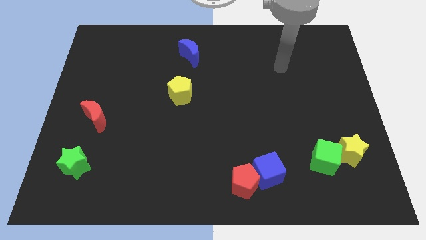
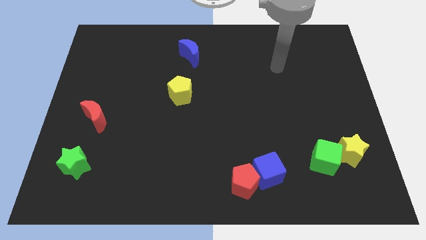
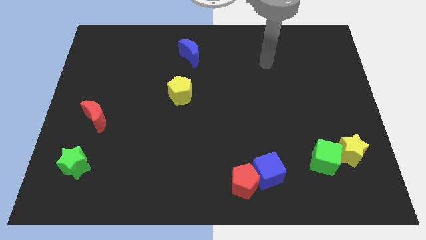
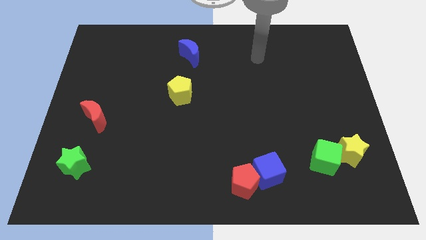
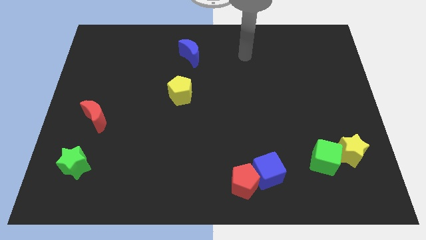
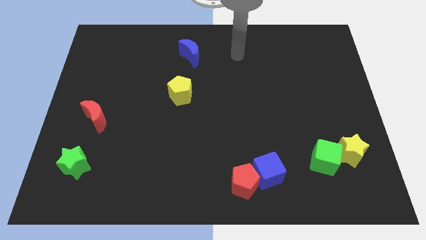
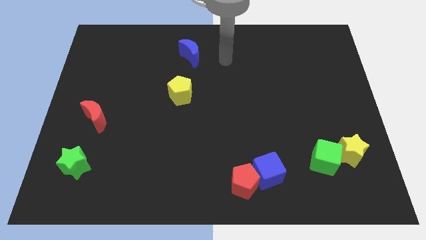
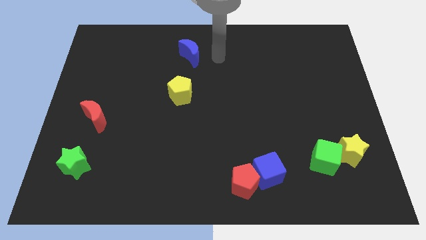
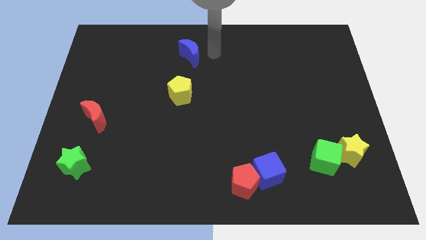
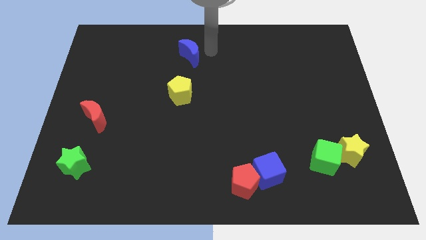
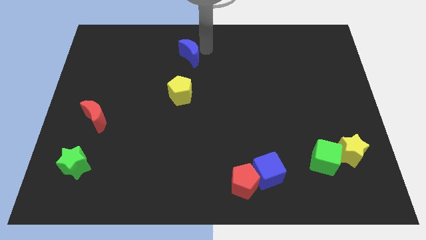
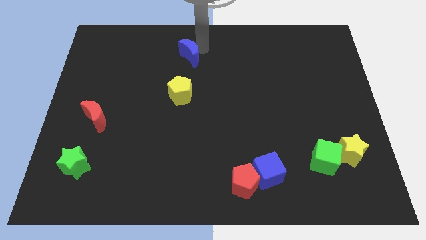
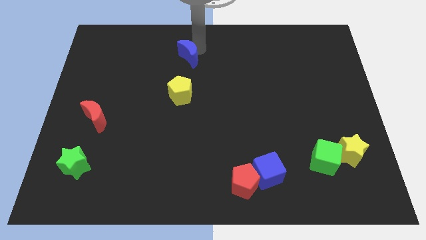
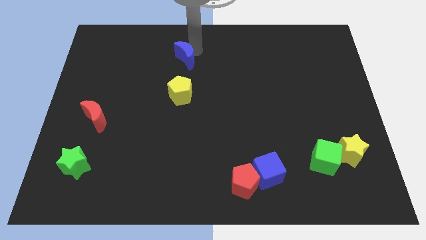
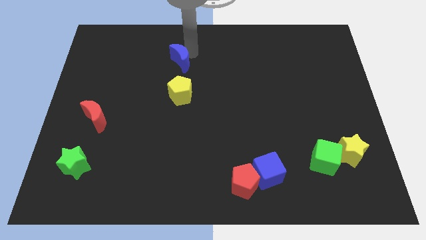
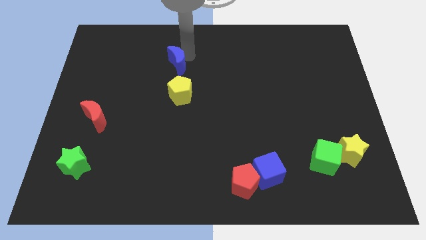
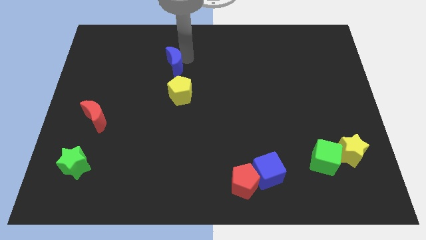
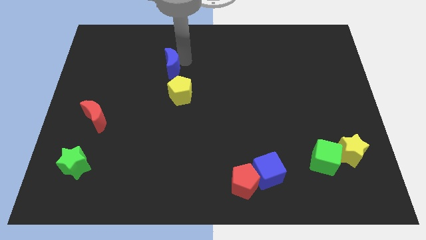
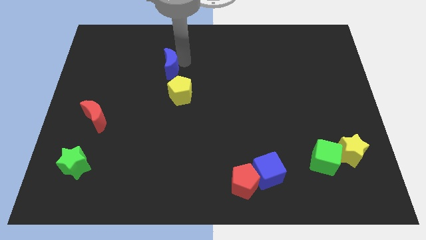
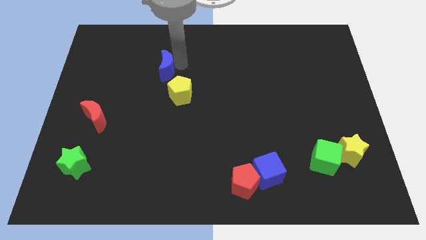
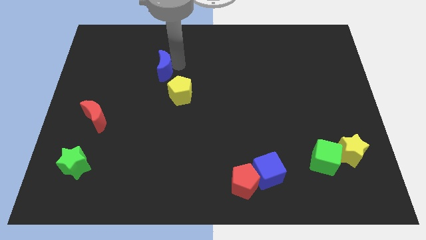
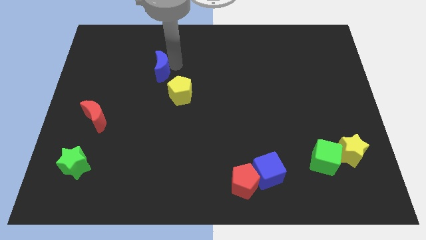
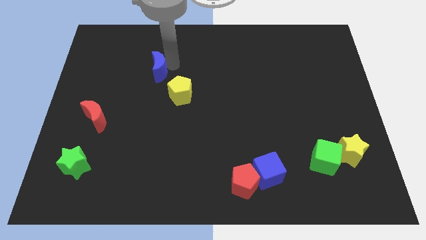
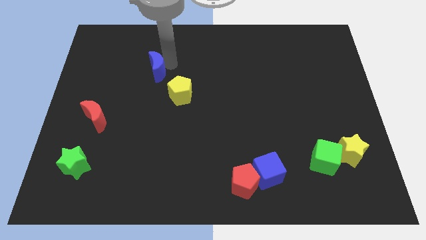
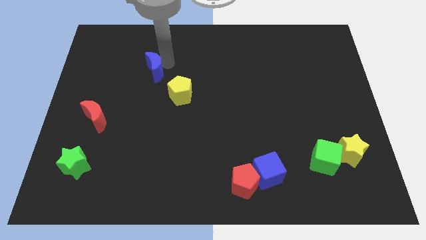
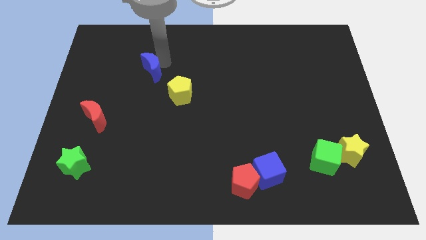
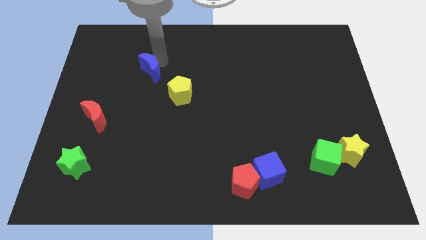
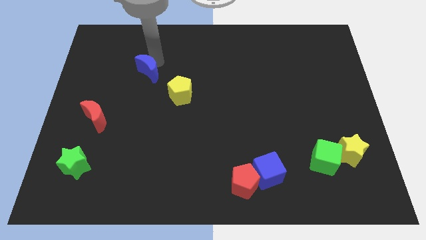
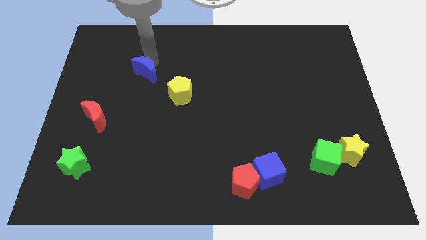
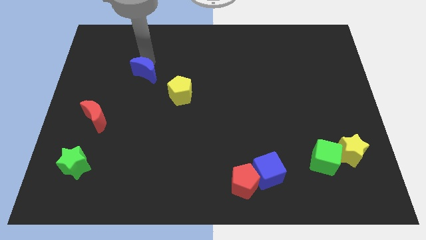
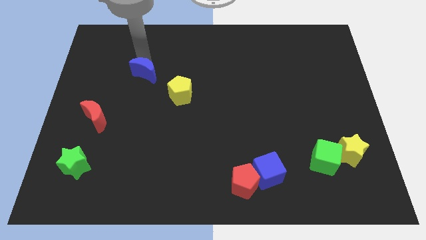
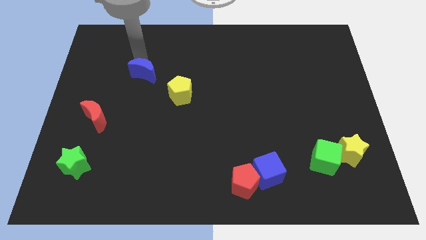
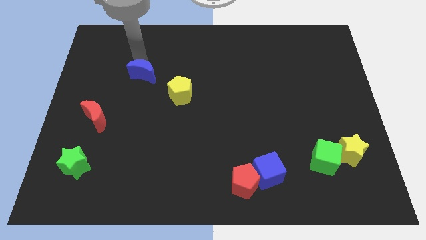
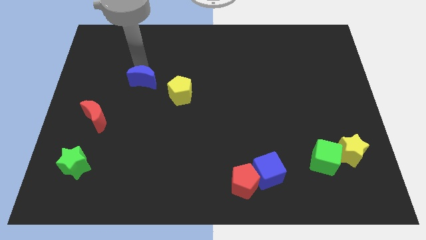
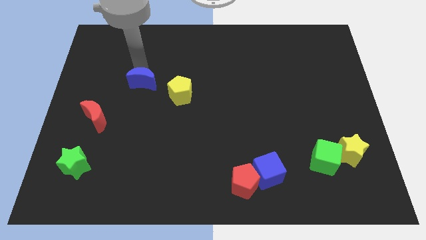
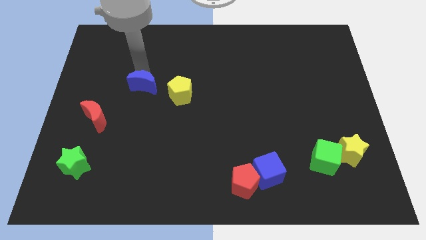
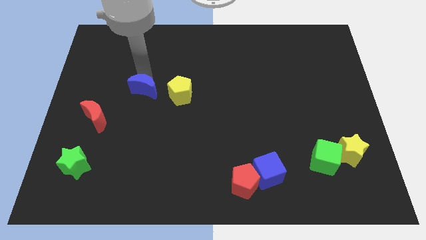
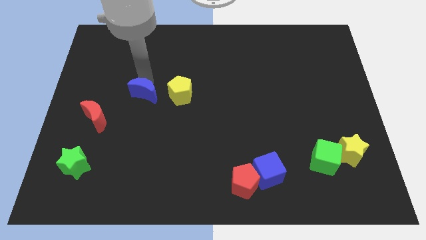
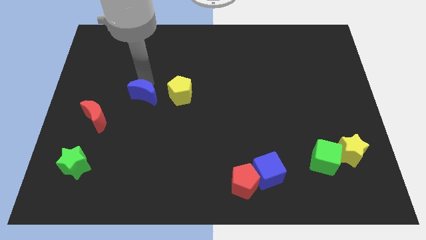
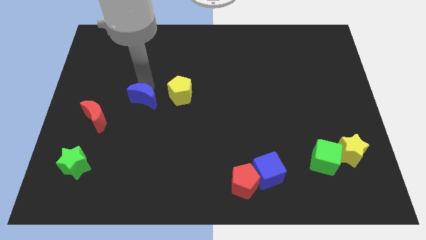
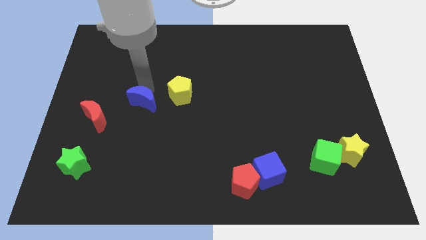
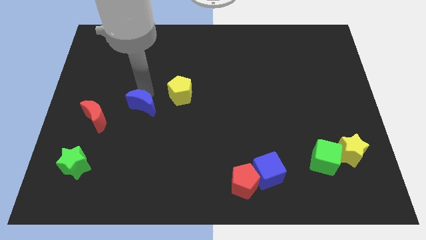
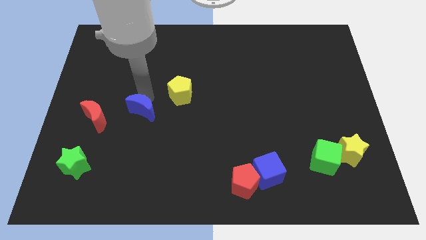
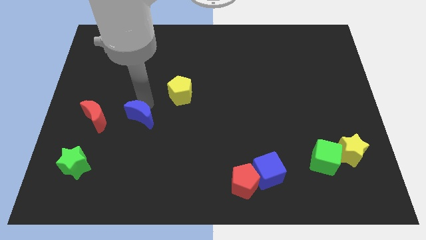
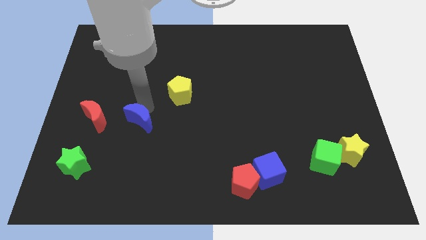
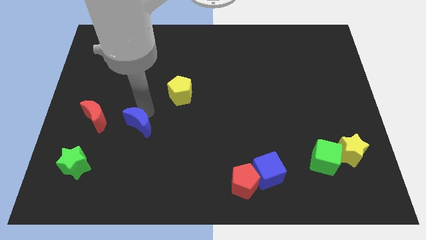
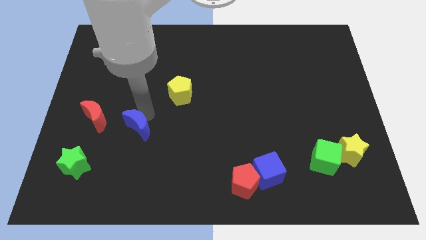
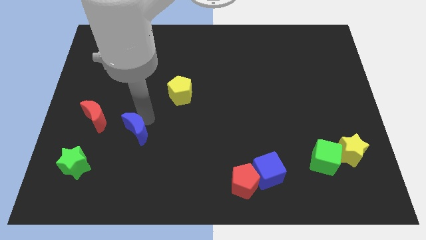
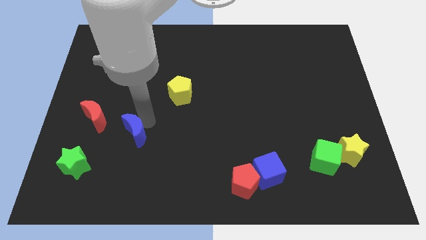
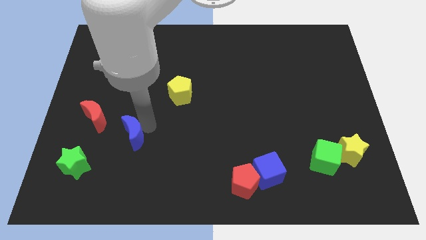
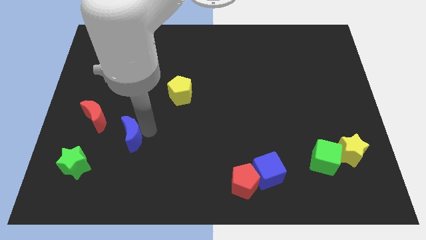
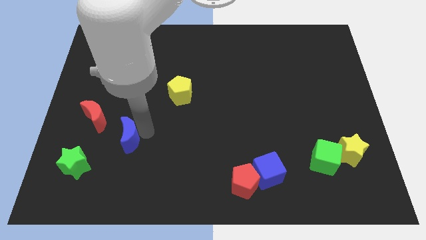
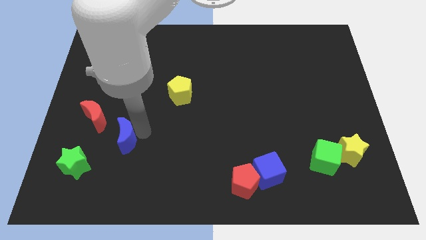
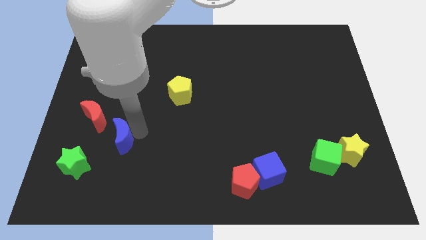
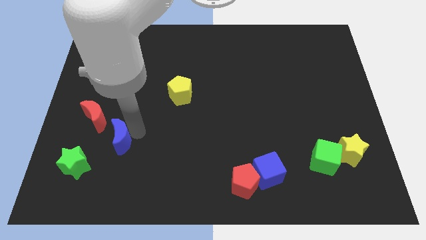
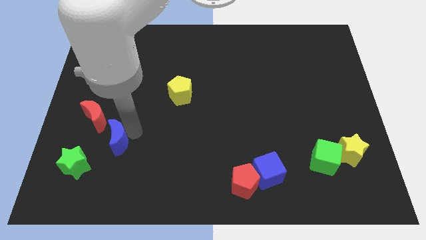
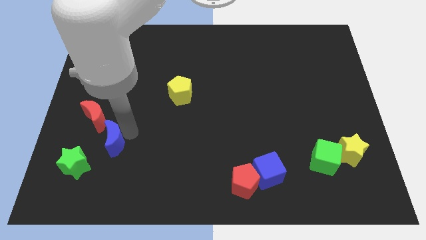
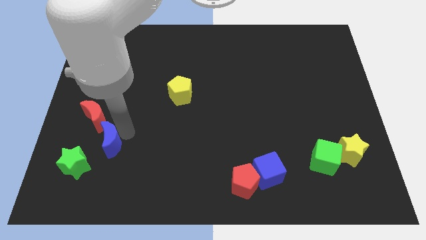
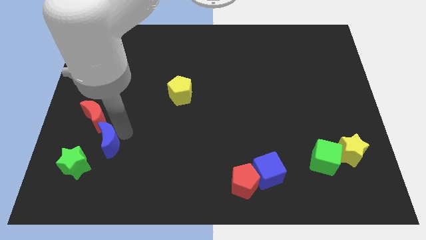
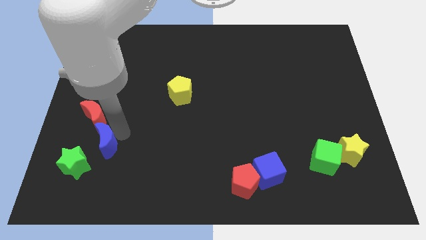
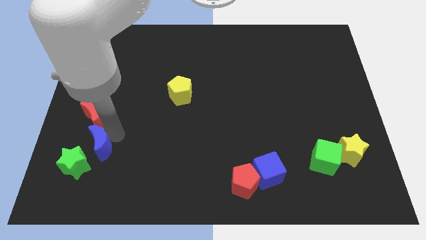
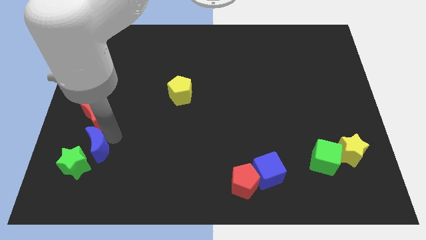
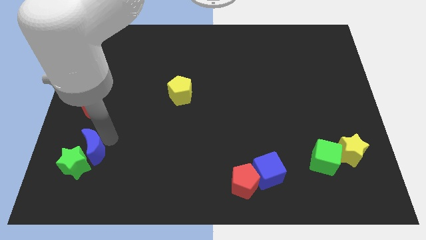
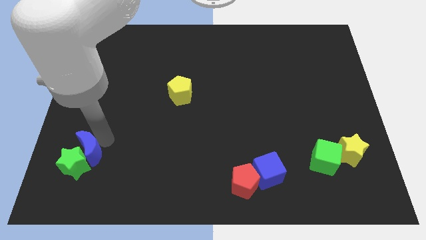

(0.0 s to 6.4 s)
push the blue moon towards the green star

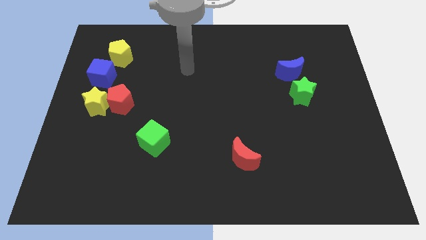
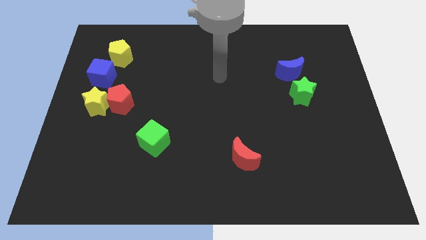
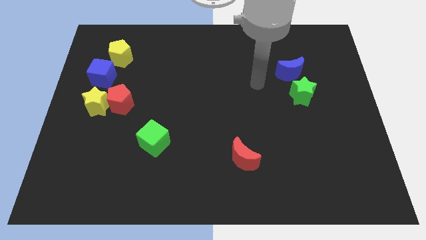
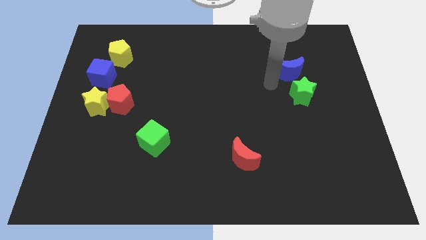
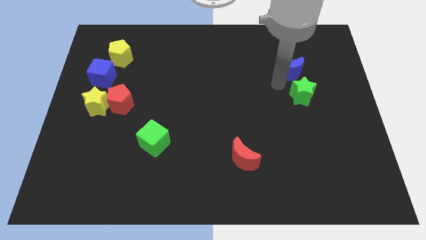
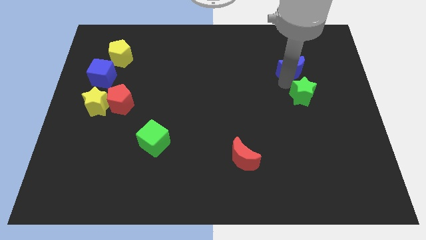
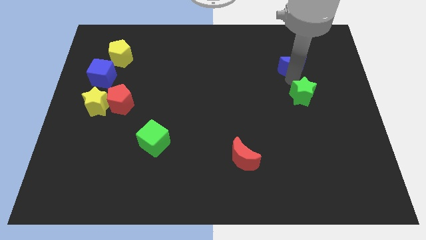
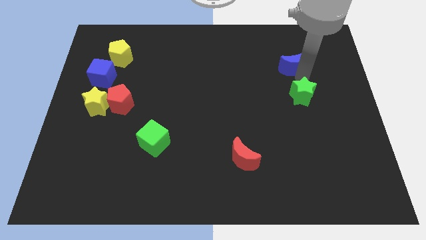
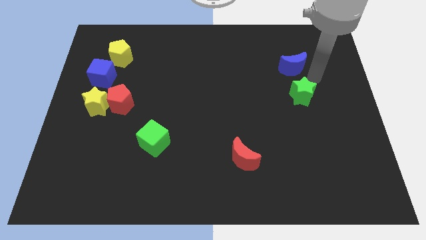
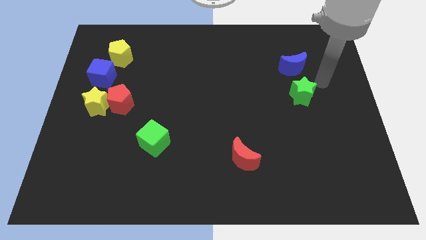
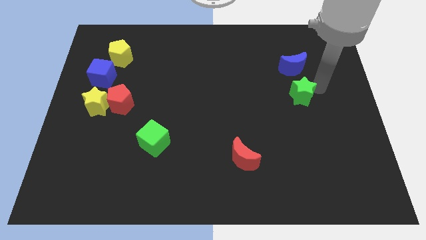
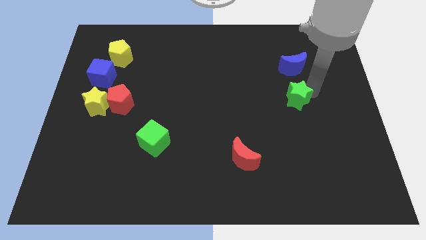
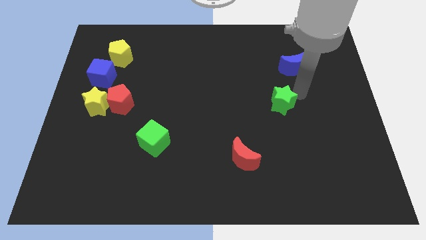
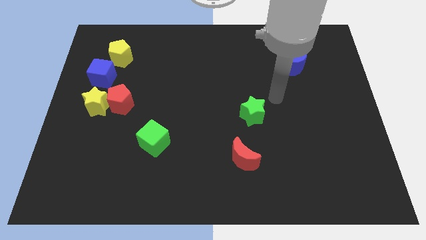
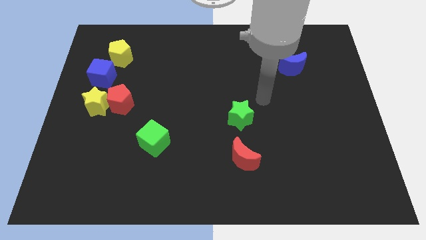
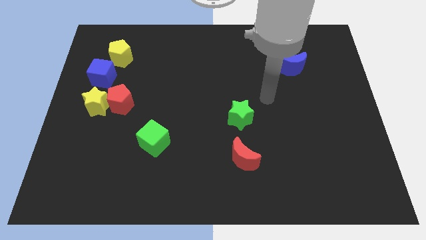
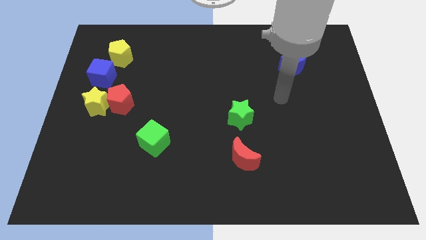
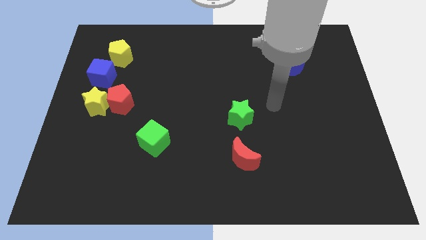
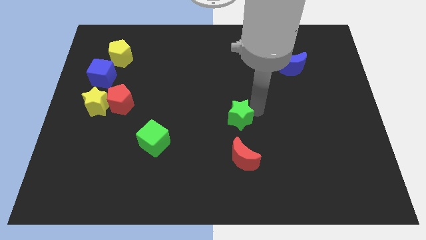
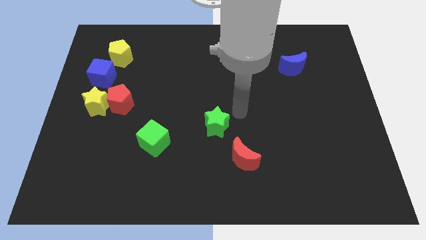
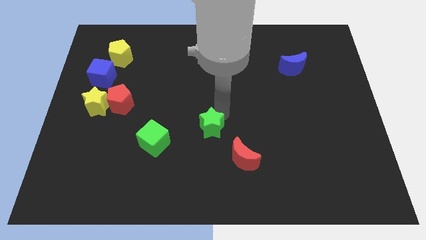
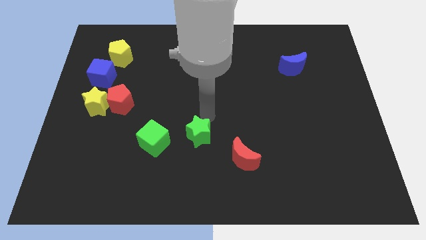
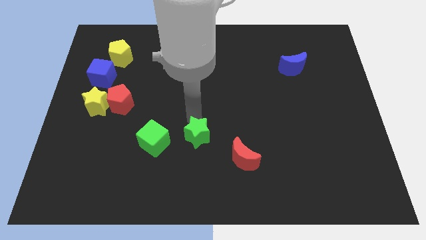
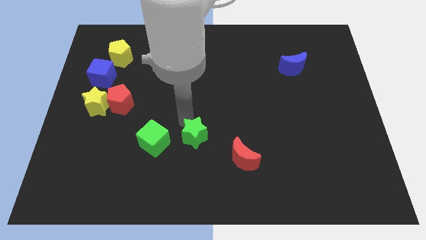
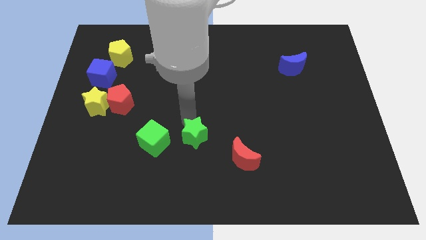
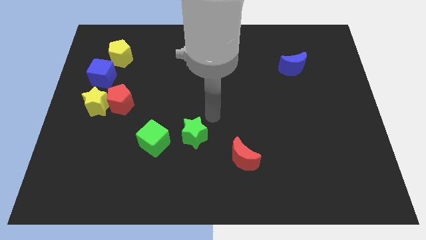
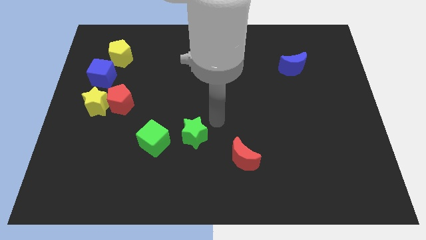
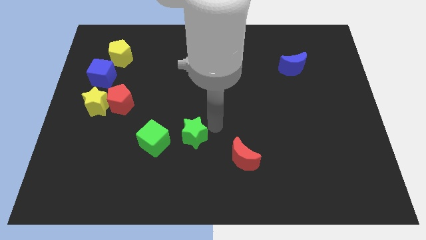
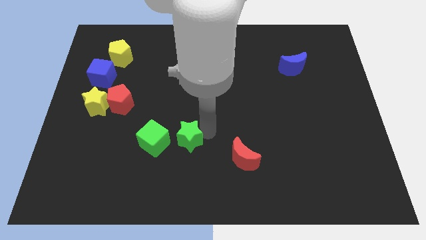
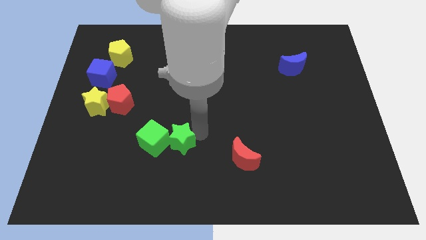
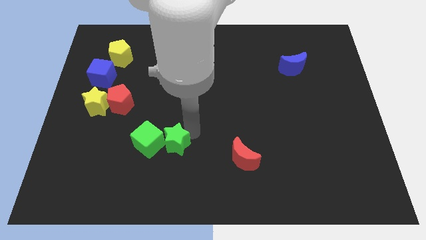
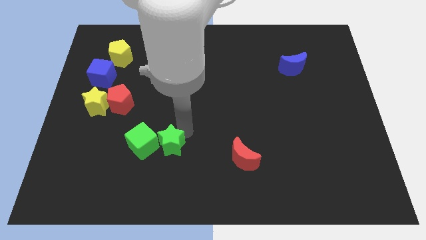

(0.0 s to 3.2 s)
slide the green star close to the green cube
